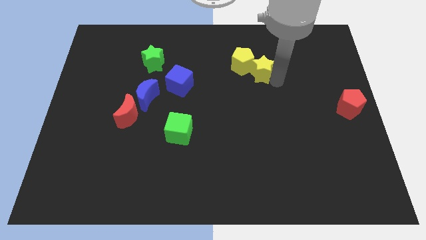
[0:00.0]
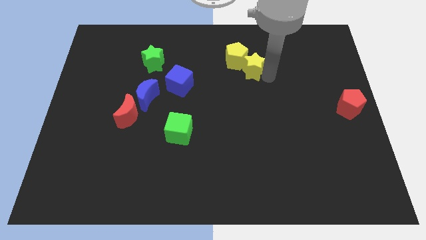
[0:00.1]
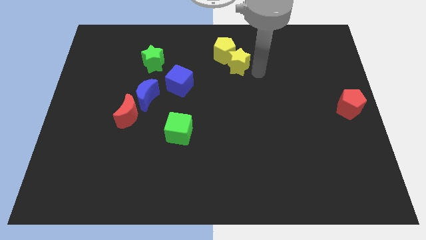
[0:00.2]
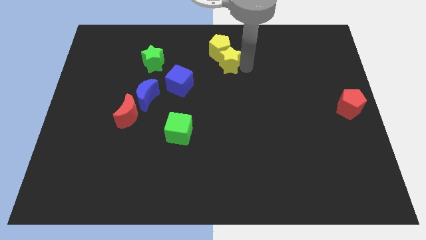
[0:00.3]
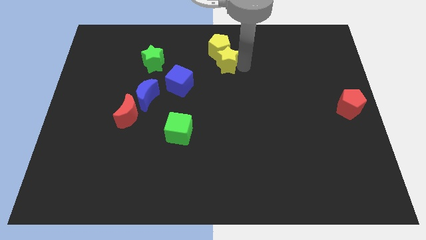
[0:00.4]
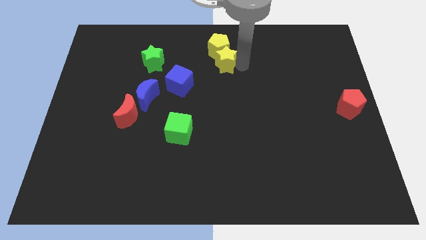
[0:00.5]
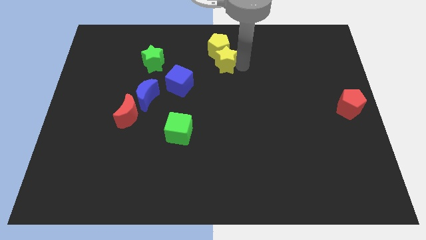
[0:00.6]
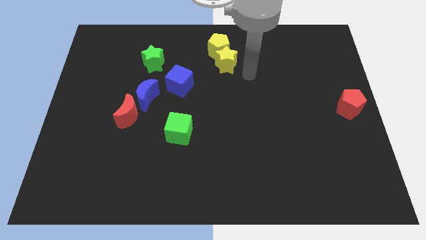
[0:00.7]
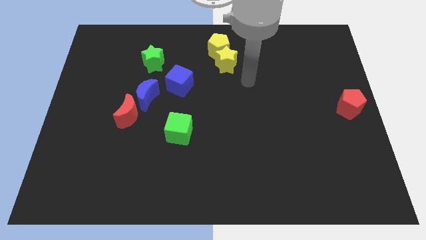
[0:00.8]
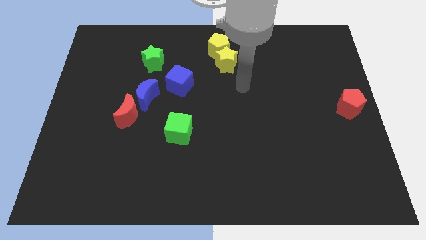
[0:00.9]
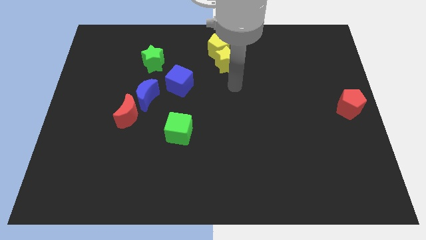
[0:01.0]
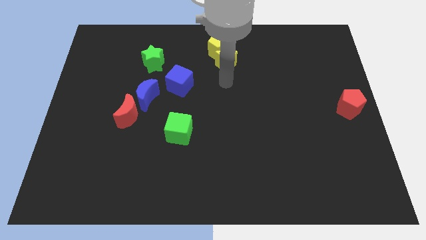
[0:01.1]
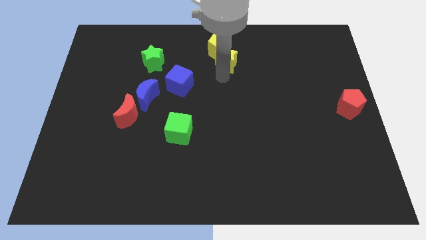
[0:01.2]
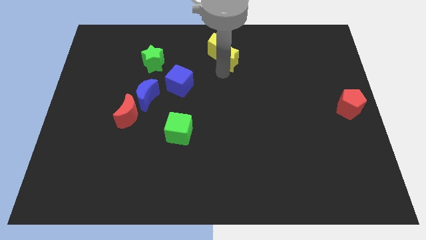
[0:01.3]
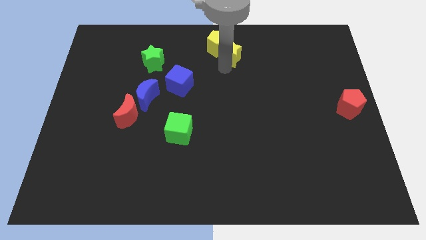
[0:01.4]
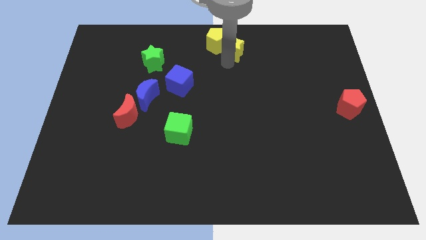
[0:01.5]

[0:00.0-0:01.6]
move both the yellow blocks towards the top center

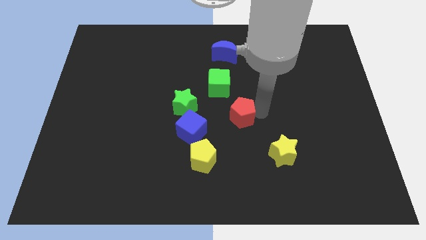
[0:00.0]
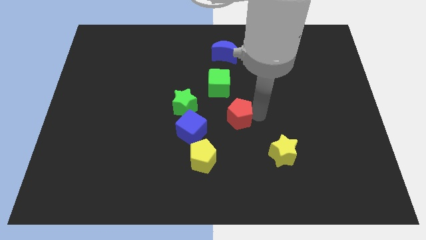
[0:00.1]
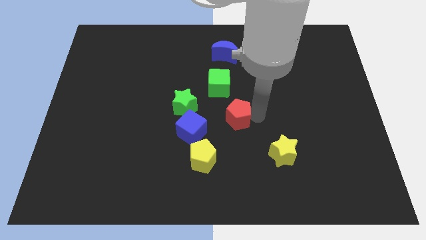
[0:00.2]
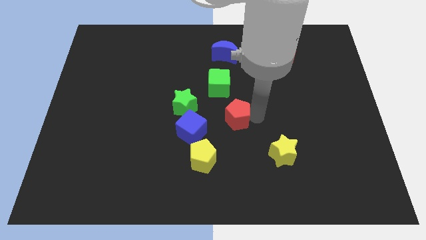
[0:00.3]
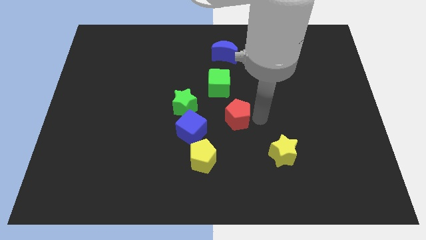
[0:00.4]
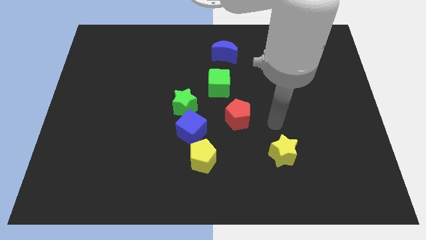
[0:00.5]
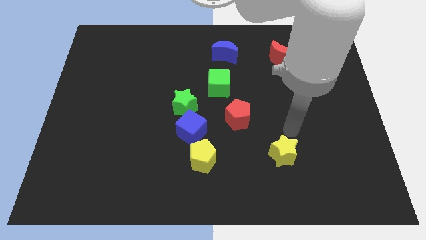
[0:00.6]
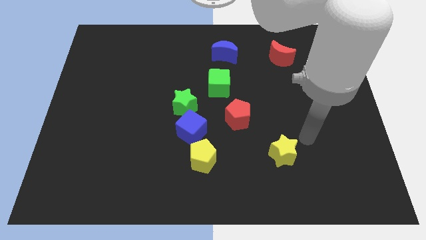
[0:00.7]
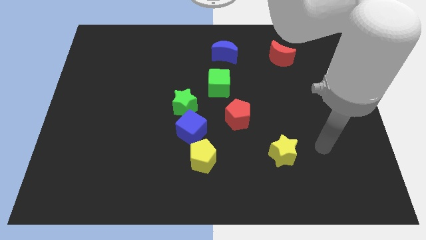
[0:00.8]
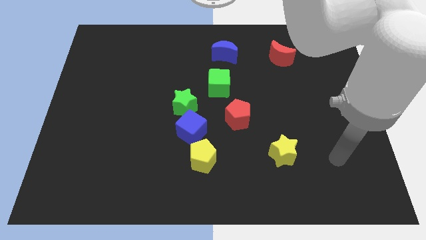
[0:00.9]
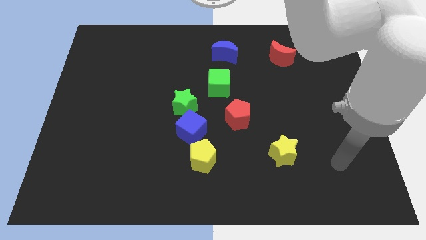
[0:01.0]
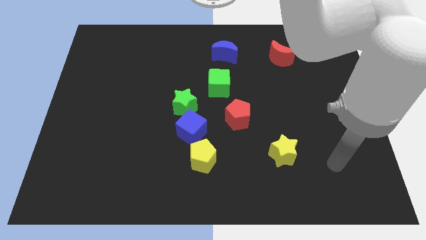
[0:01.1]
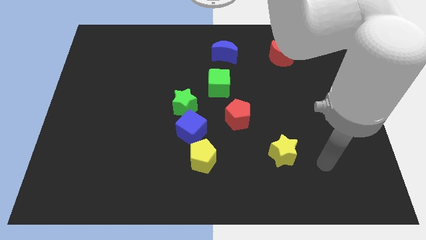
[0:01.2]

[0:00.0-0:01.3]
slightly push the red pentagon towards the center of the board

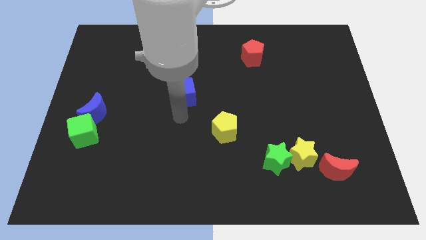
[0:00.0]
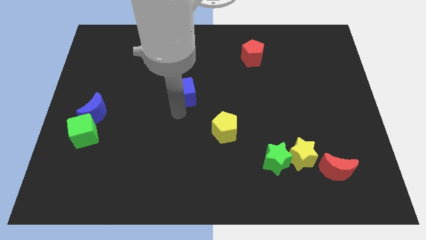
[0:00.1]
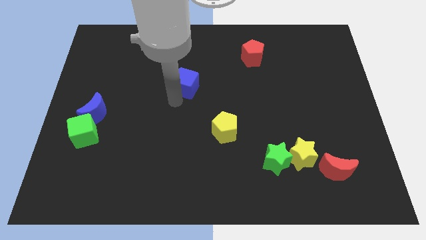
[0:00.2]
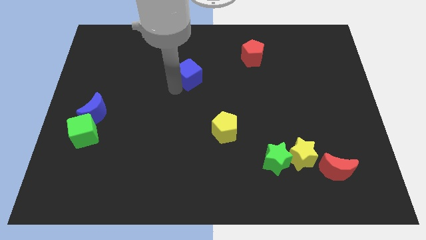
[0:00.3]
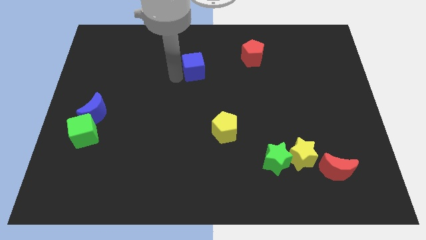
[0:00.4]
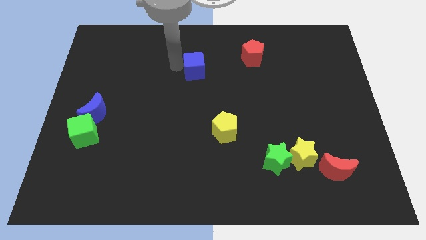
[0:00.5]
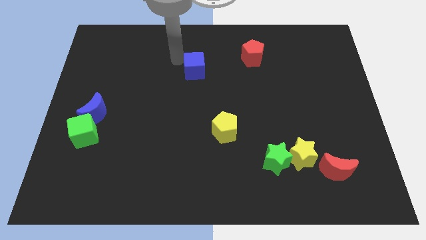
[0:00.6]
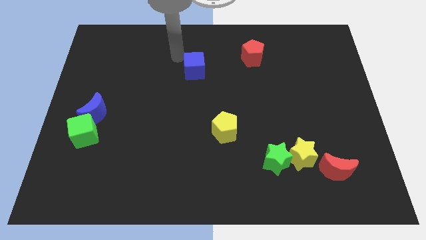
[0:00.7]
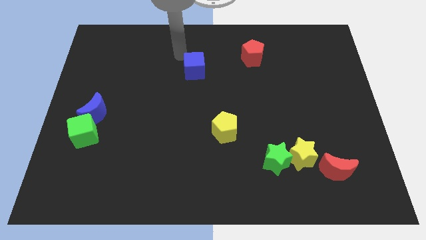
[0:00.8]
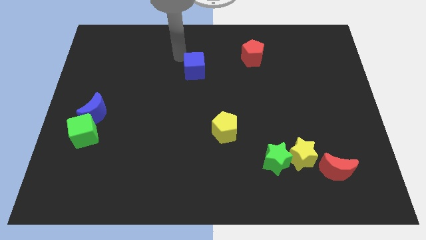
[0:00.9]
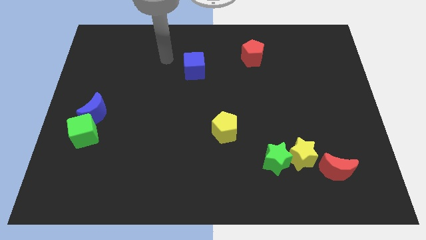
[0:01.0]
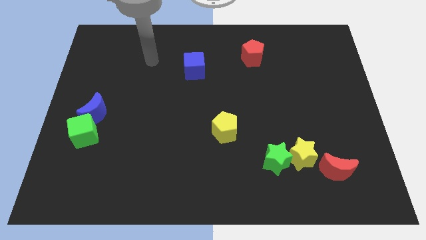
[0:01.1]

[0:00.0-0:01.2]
move the blue cube towards the top center

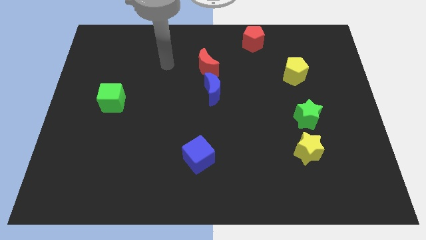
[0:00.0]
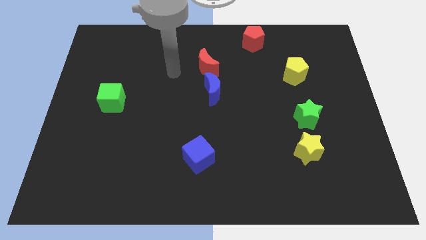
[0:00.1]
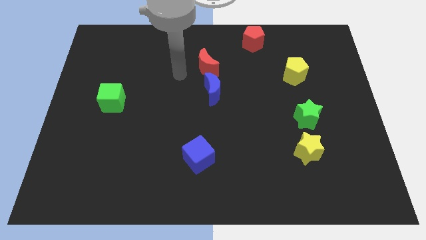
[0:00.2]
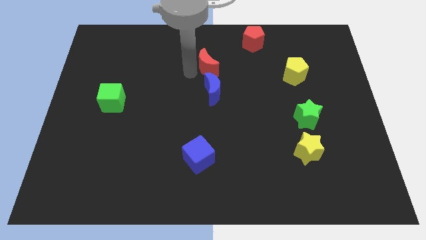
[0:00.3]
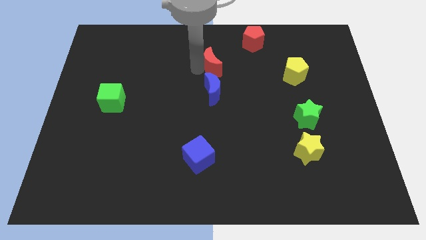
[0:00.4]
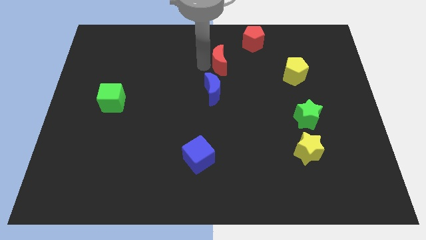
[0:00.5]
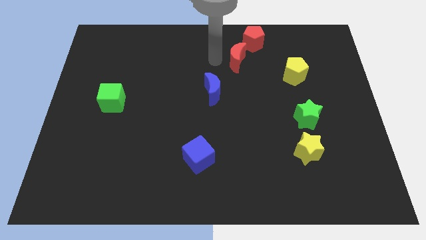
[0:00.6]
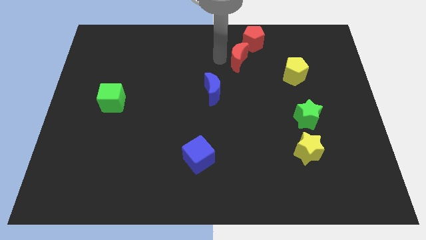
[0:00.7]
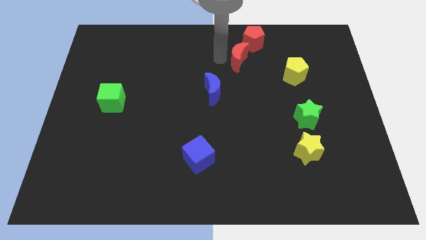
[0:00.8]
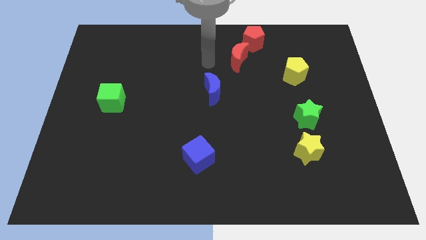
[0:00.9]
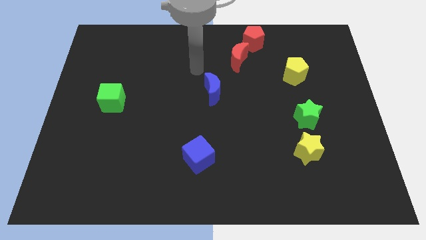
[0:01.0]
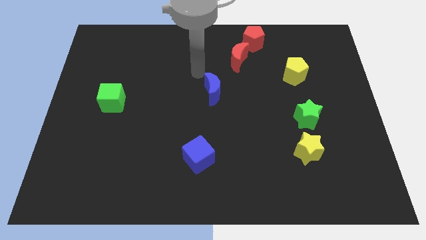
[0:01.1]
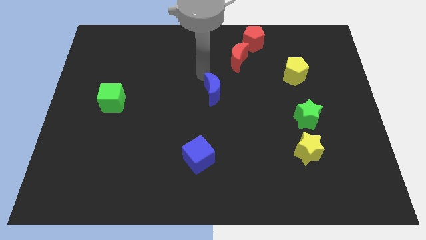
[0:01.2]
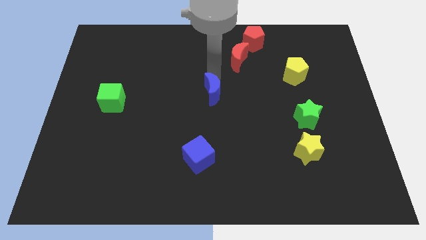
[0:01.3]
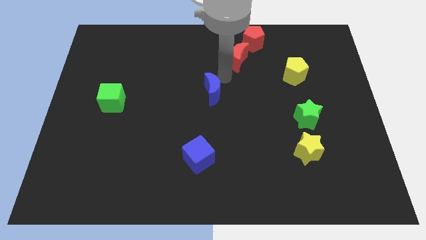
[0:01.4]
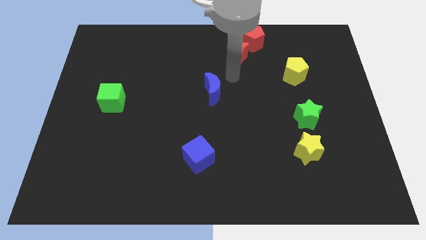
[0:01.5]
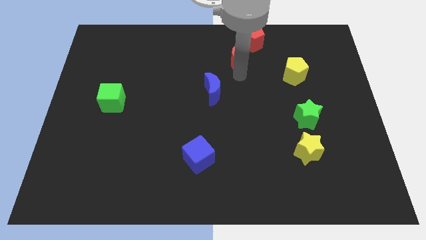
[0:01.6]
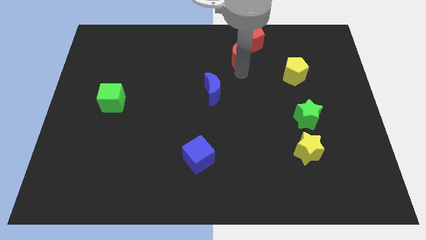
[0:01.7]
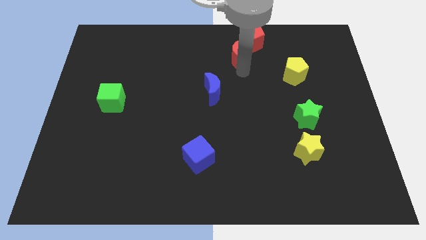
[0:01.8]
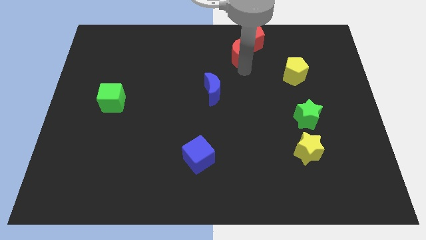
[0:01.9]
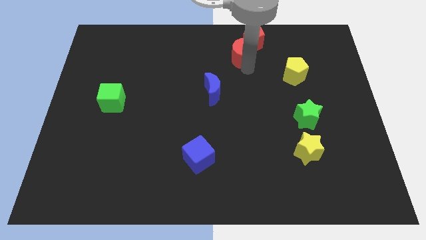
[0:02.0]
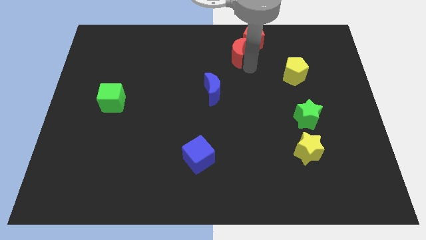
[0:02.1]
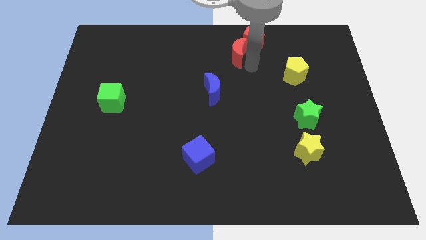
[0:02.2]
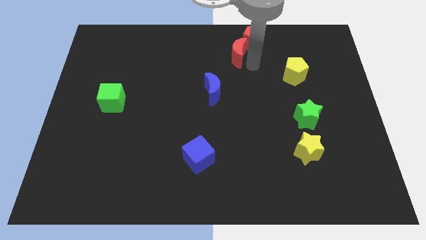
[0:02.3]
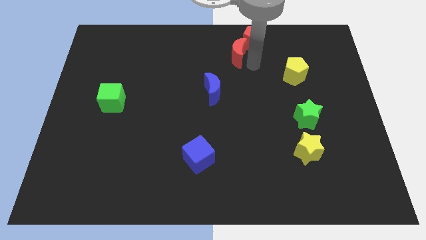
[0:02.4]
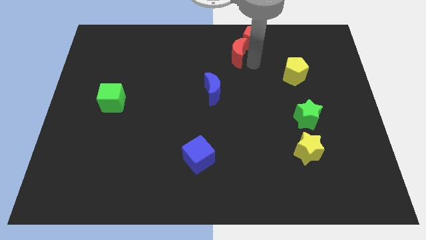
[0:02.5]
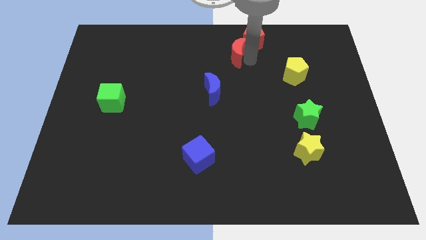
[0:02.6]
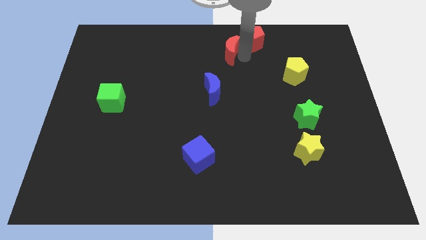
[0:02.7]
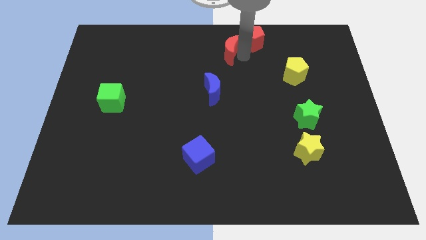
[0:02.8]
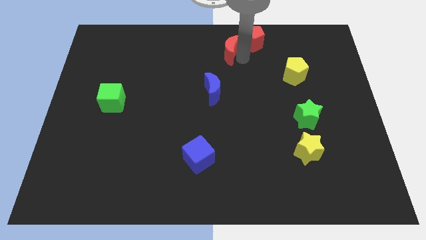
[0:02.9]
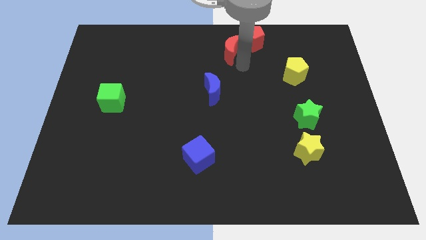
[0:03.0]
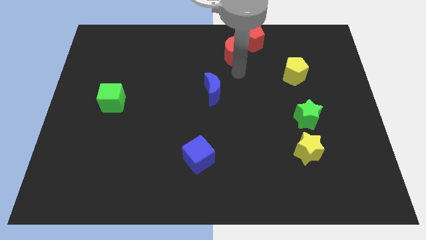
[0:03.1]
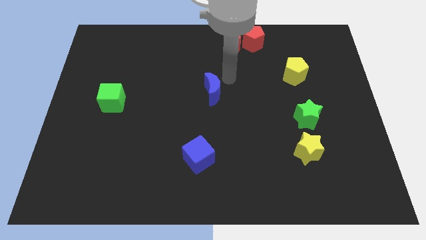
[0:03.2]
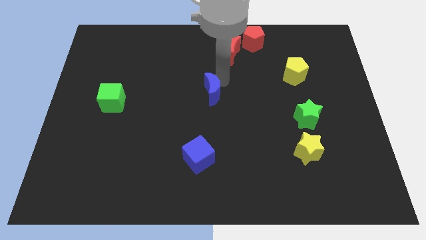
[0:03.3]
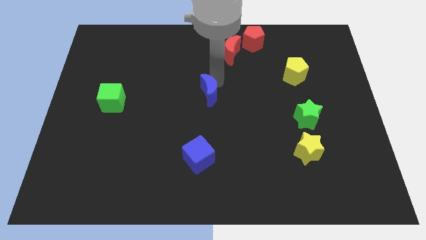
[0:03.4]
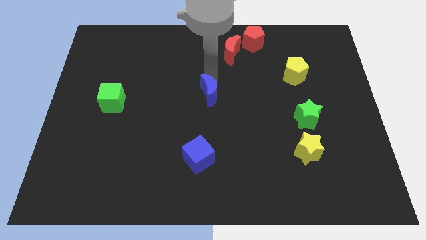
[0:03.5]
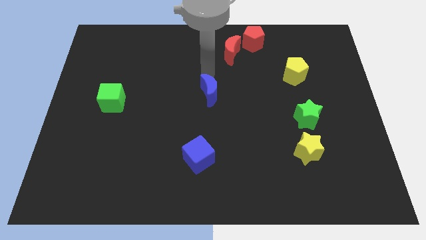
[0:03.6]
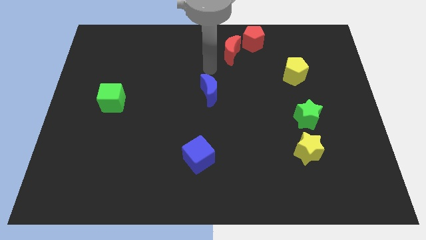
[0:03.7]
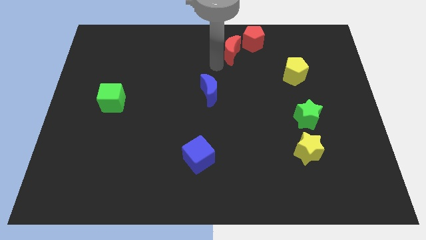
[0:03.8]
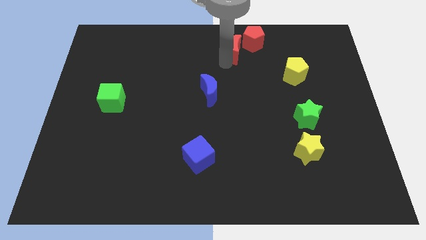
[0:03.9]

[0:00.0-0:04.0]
place the red crescent left to the red pentagon

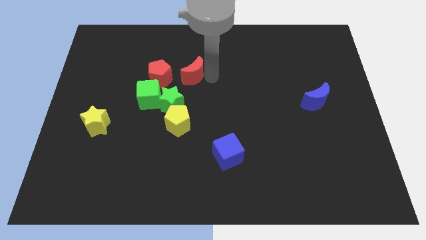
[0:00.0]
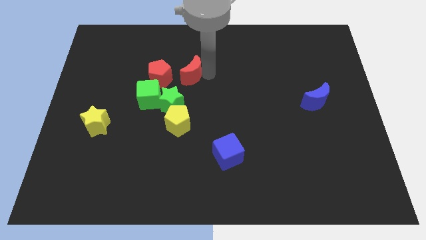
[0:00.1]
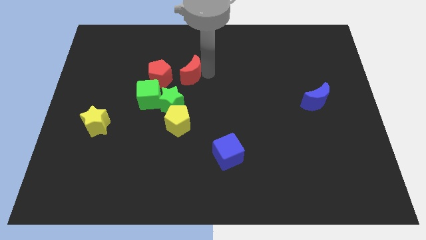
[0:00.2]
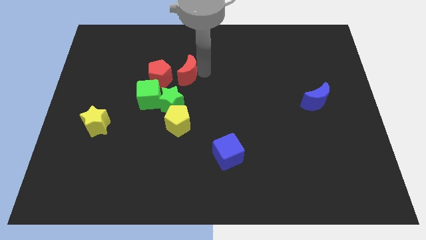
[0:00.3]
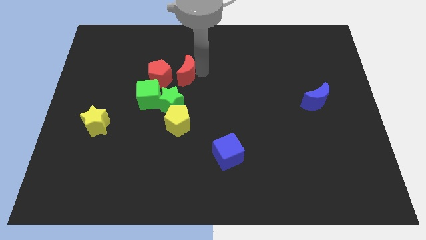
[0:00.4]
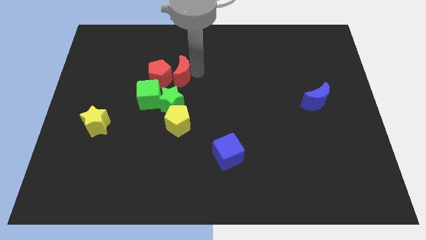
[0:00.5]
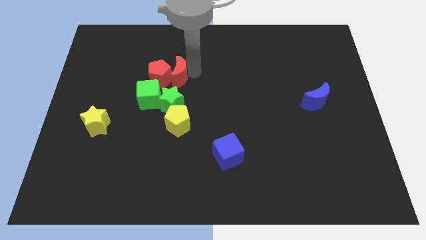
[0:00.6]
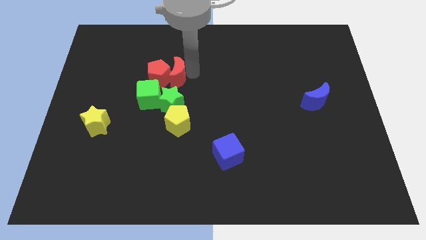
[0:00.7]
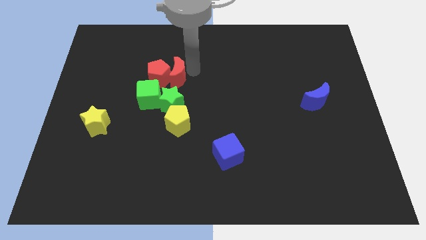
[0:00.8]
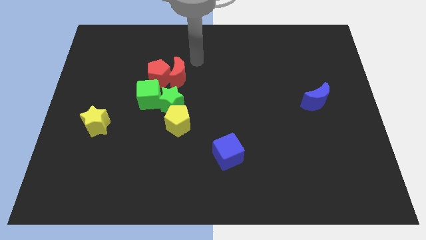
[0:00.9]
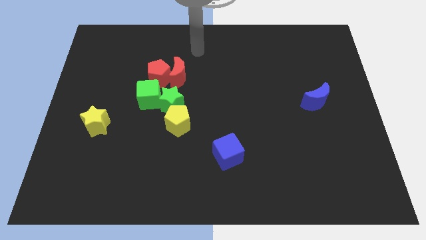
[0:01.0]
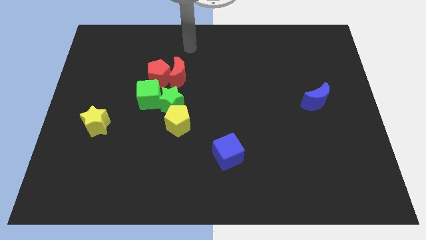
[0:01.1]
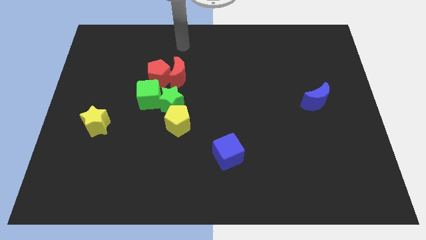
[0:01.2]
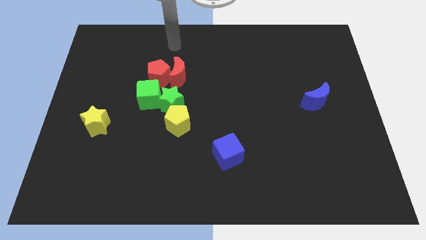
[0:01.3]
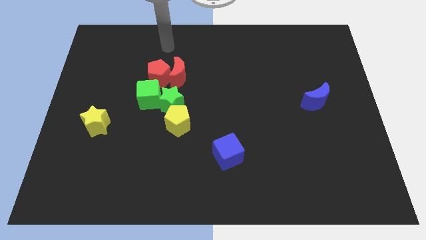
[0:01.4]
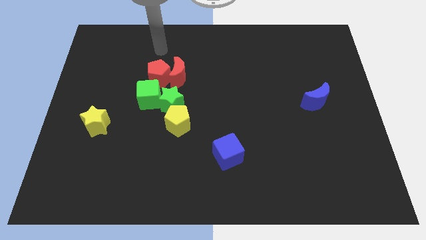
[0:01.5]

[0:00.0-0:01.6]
move red moon into the red pentagon
